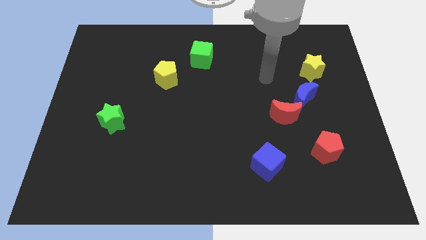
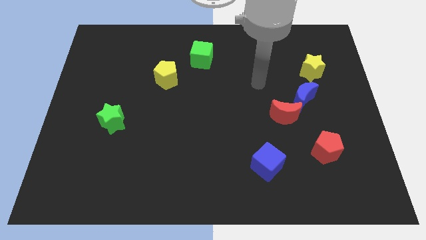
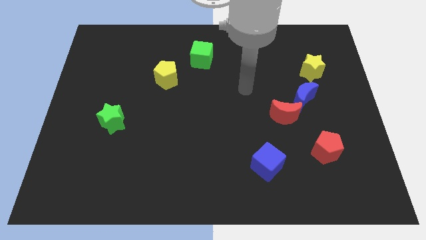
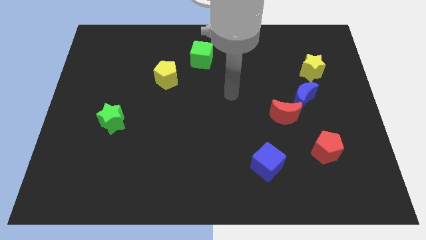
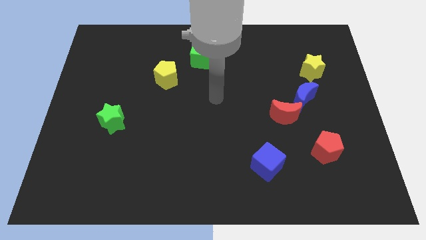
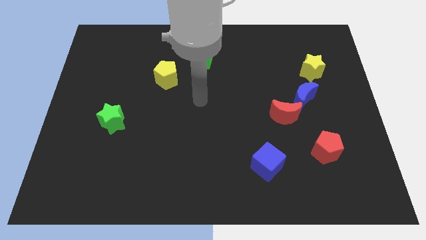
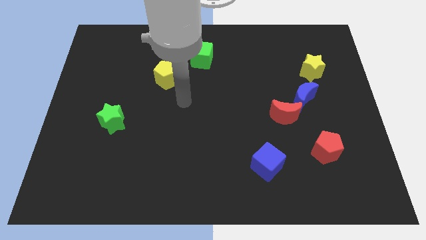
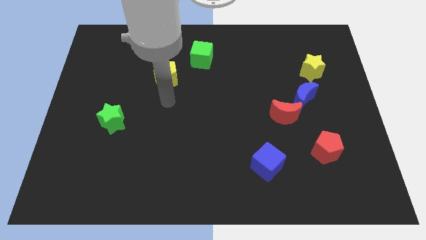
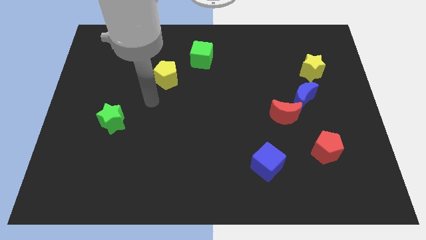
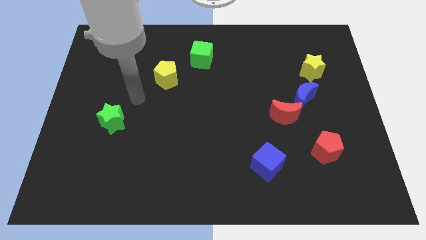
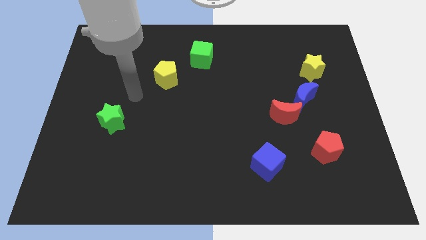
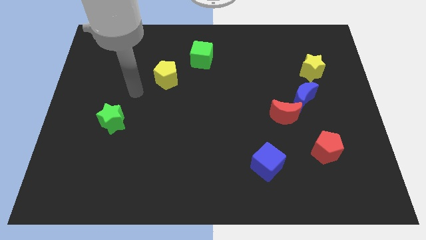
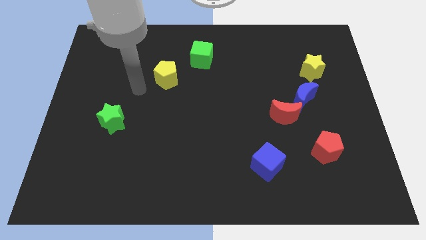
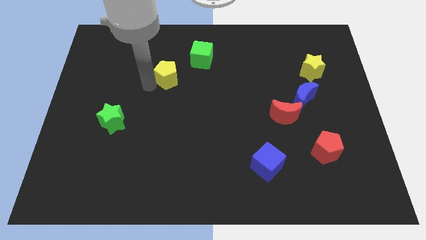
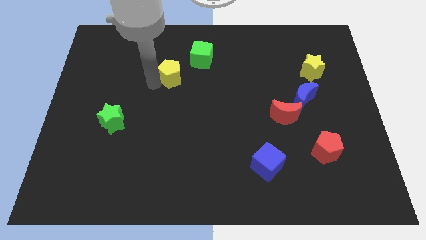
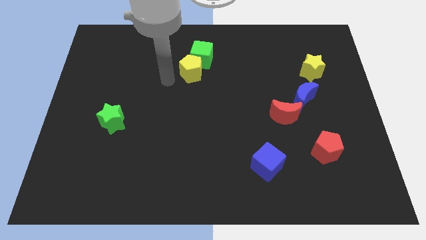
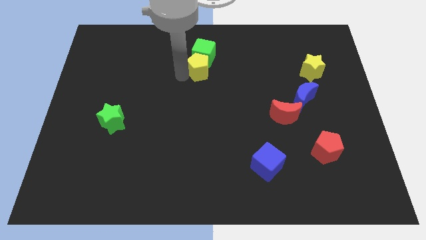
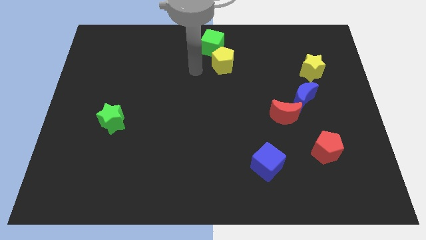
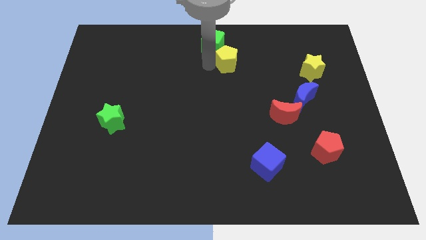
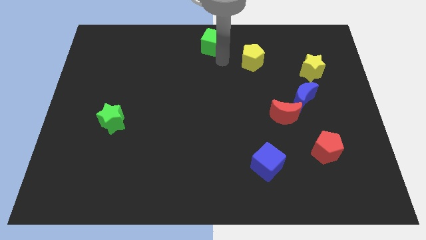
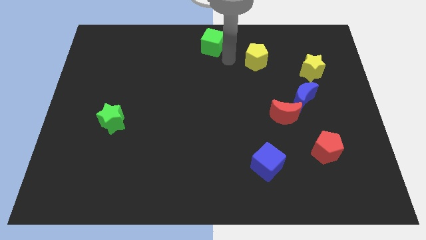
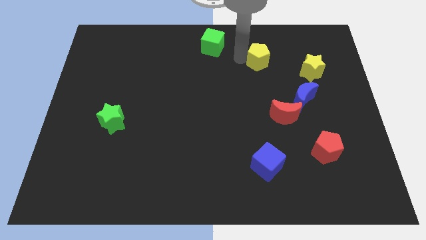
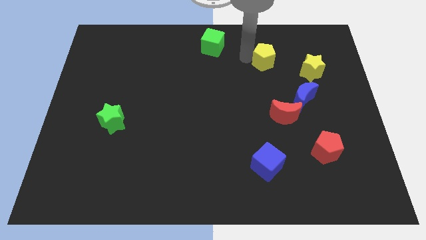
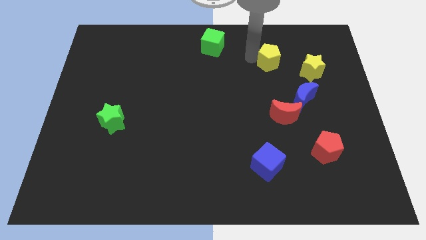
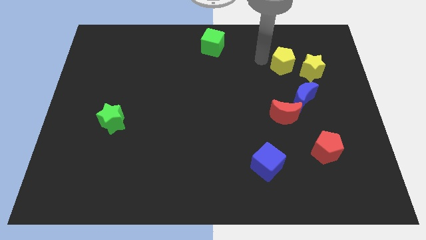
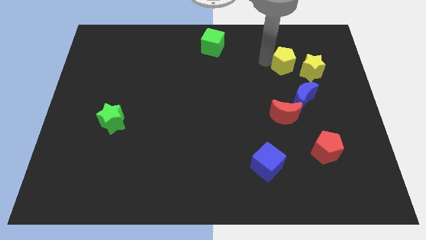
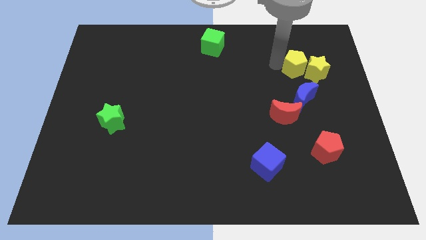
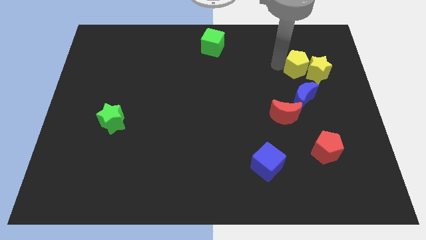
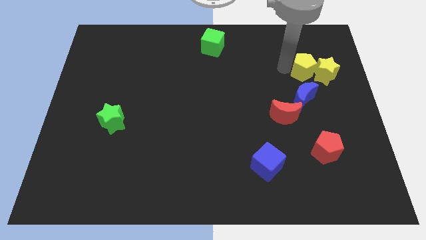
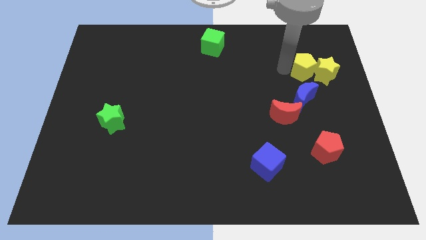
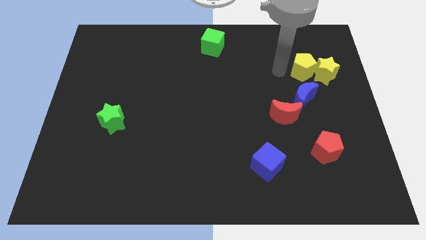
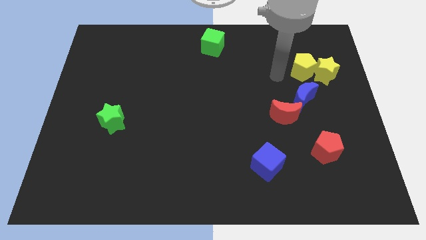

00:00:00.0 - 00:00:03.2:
move the yellow pentagon towards the left to yellow star

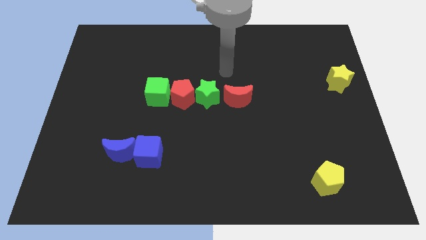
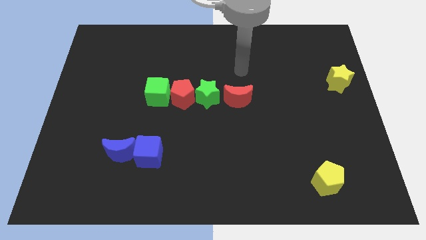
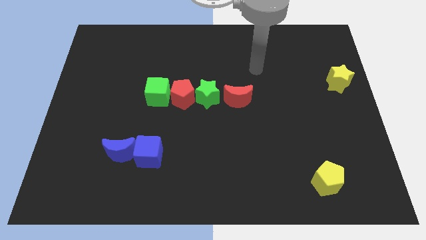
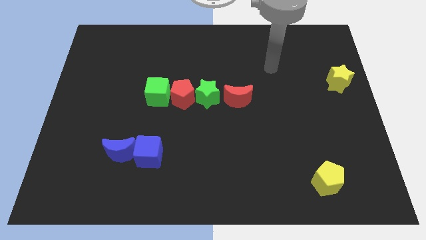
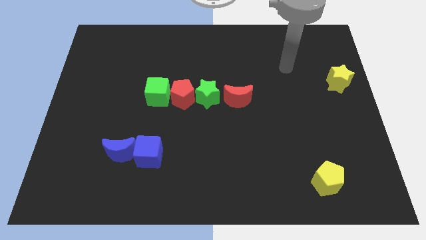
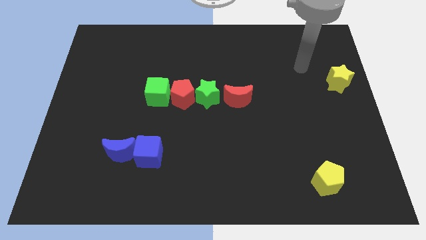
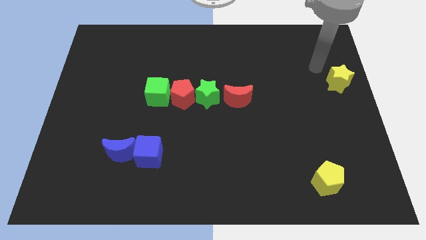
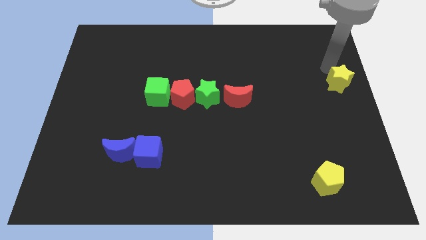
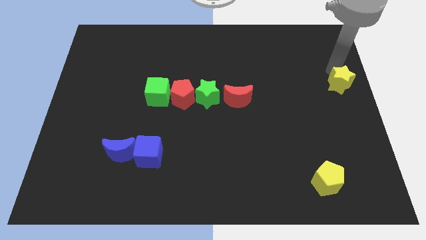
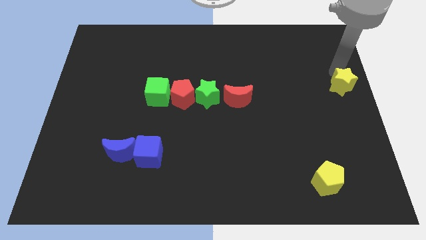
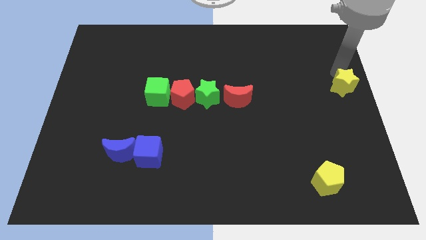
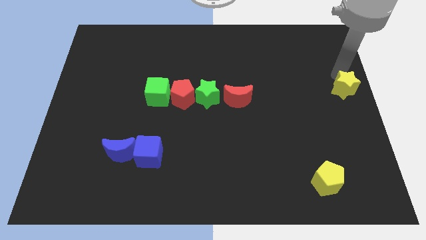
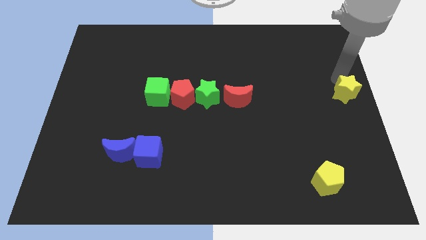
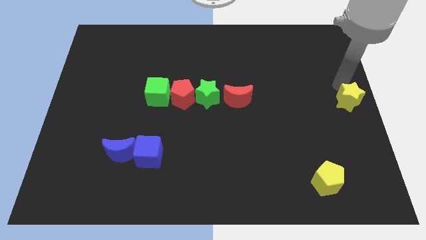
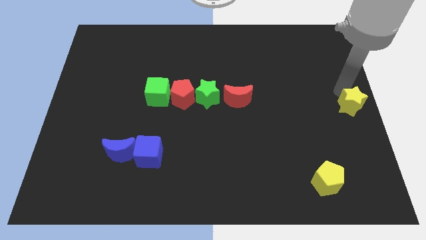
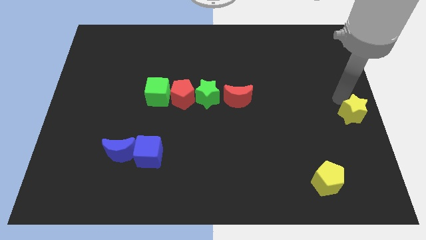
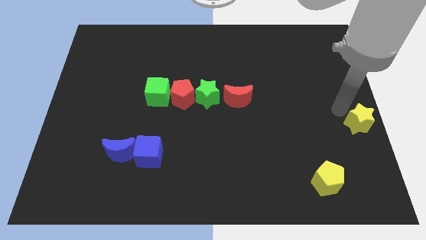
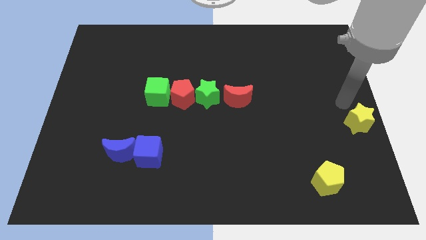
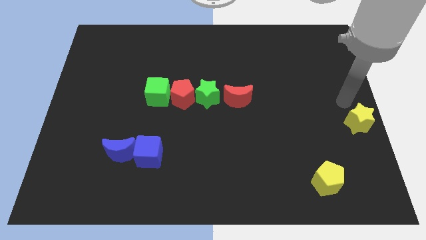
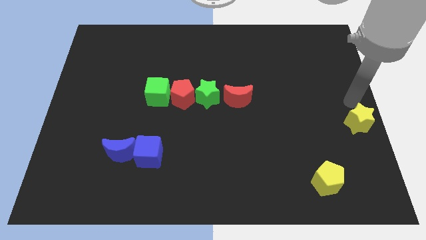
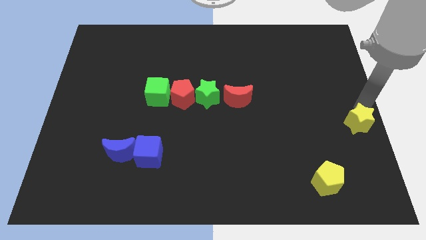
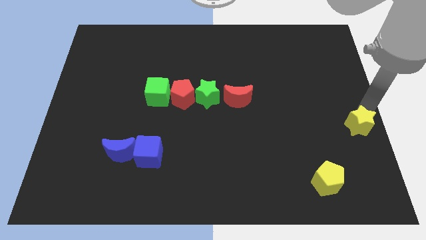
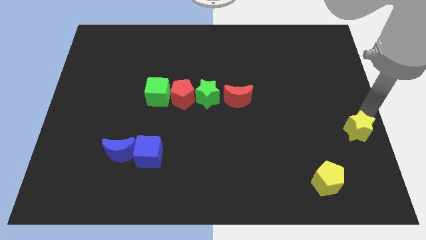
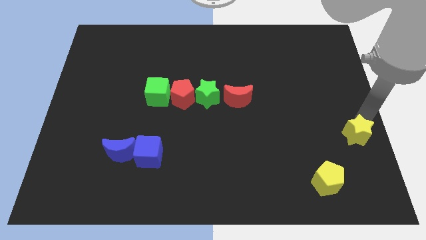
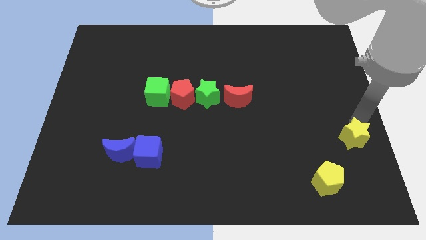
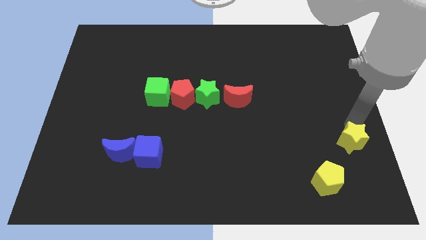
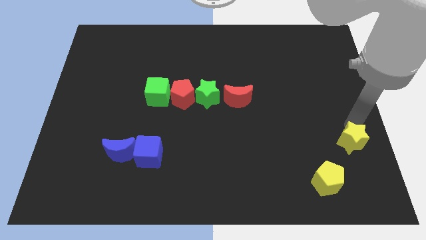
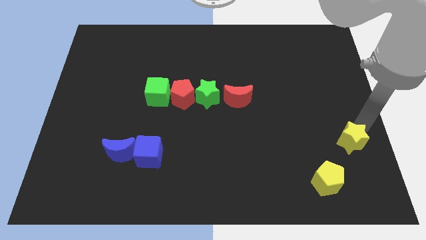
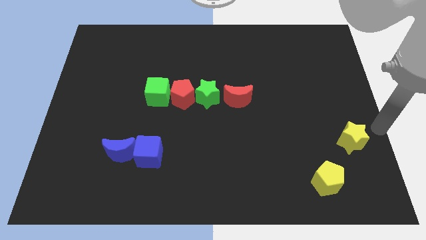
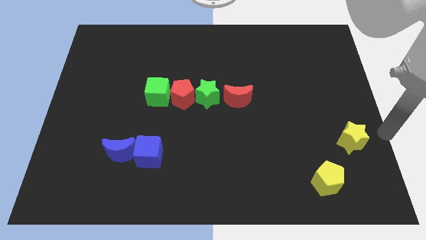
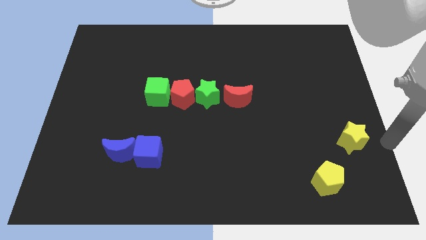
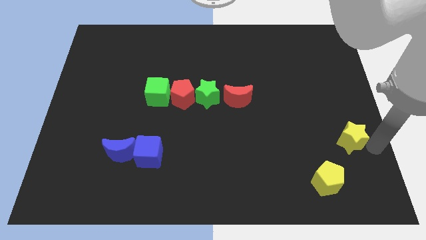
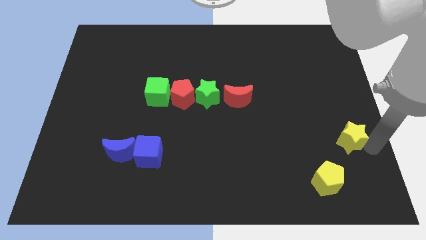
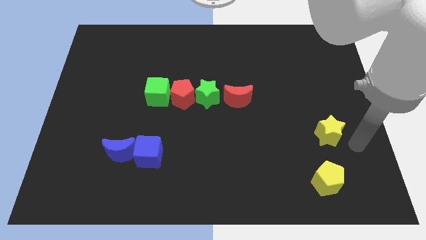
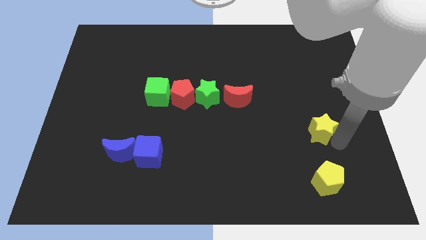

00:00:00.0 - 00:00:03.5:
place the yellow star at the top side of the yellow pentagon

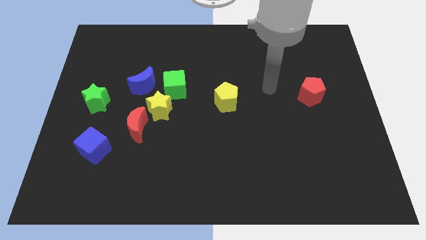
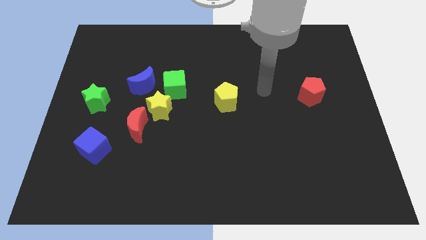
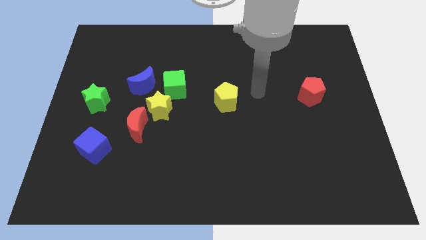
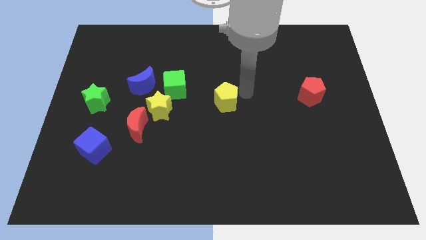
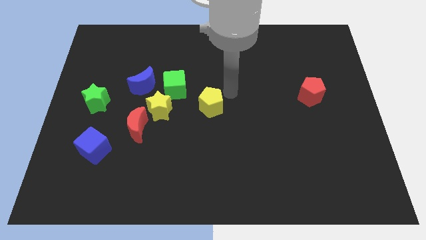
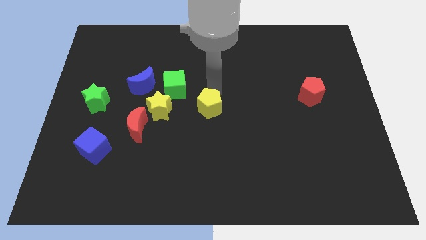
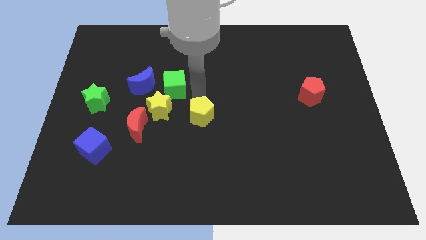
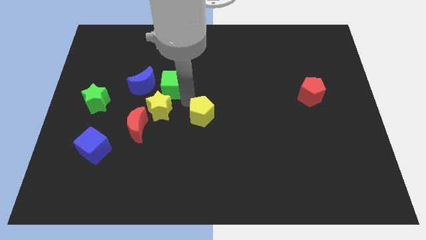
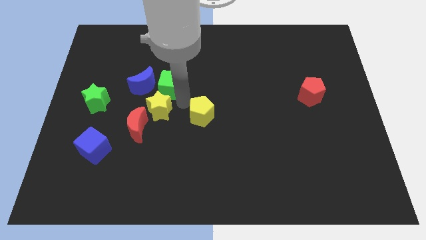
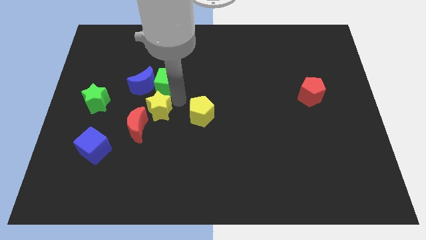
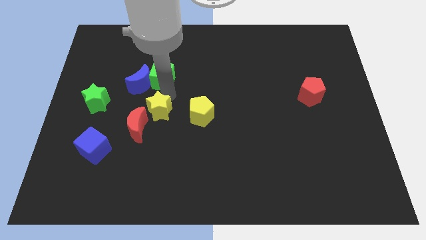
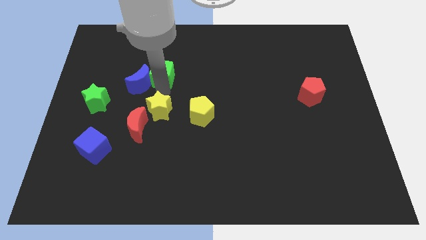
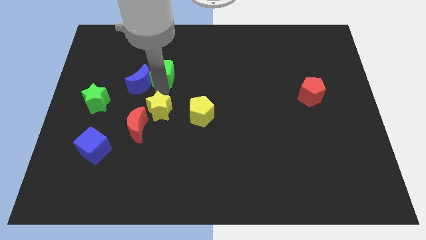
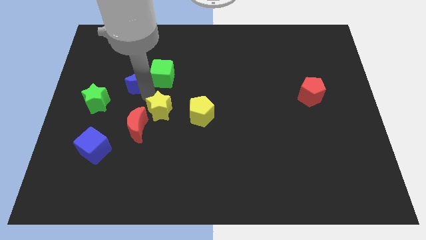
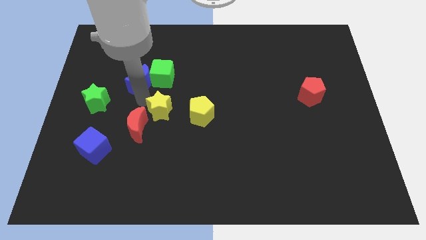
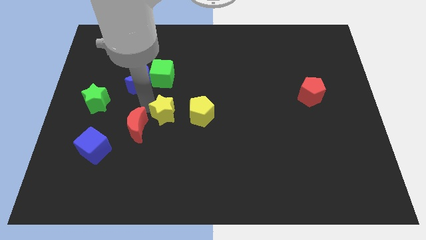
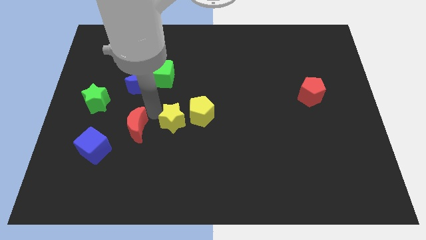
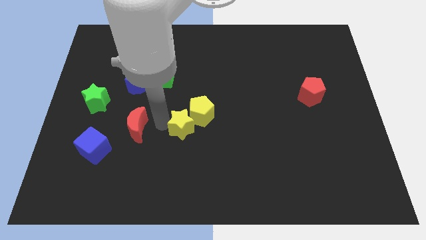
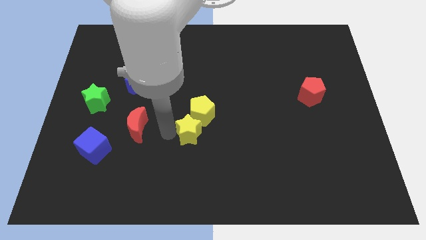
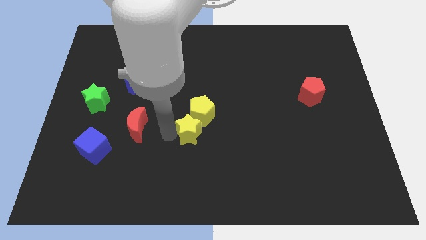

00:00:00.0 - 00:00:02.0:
place a yellow star and pentagon towards the center of the board

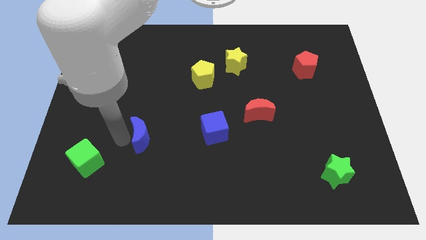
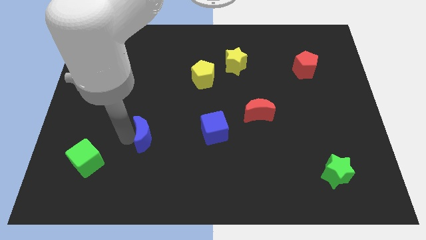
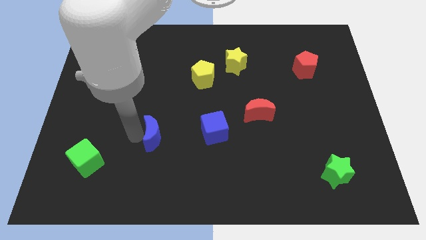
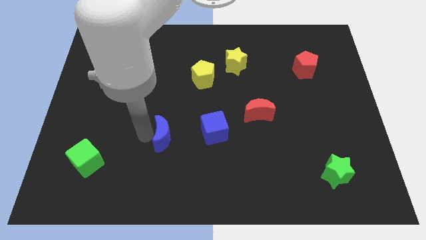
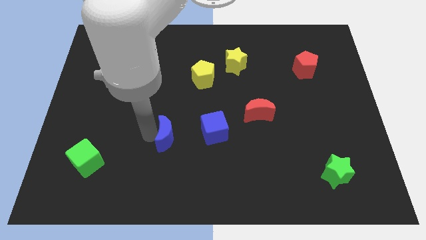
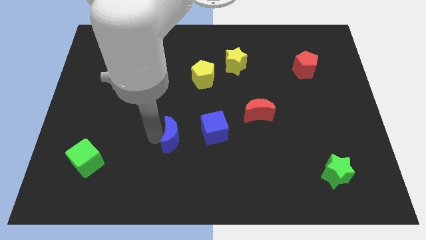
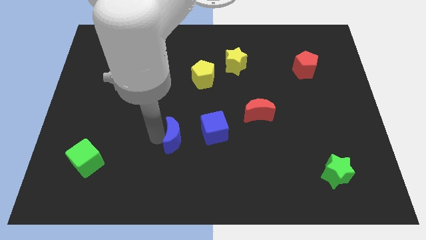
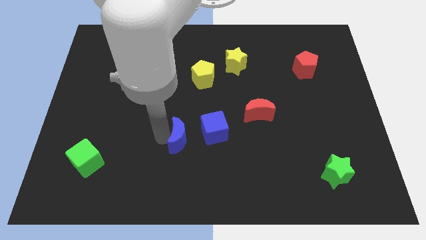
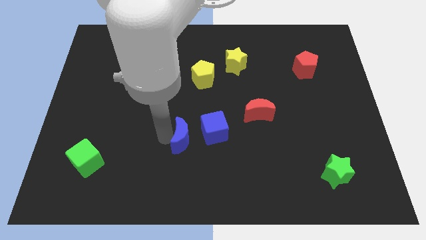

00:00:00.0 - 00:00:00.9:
slide blue moon towards blue cube
